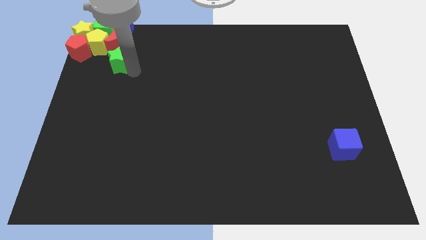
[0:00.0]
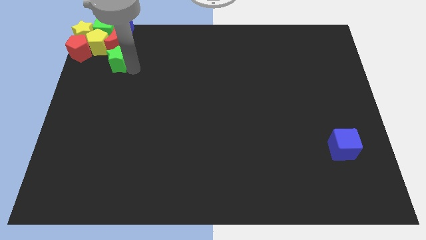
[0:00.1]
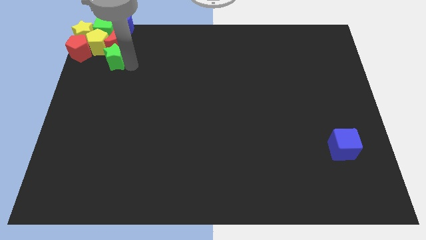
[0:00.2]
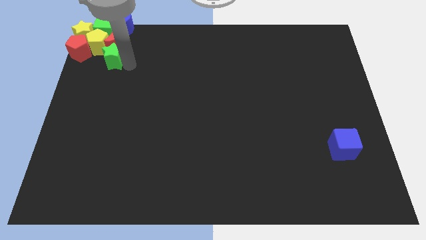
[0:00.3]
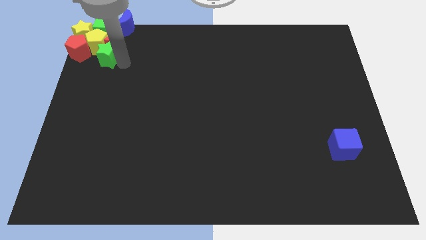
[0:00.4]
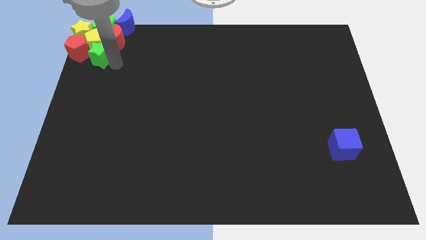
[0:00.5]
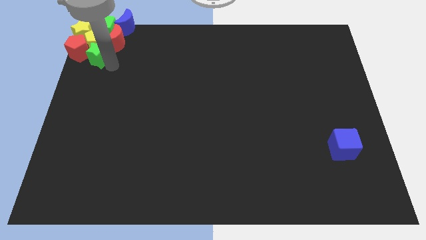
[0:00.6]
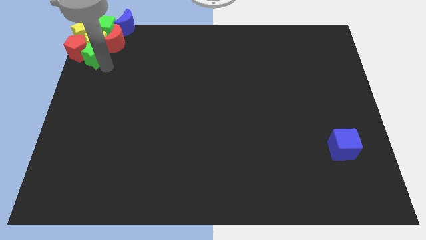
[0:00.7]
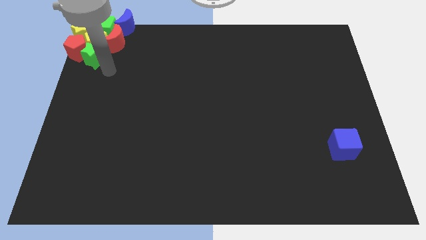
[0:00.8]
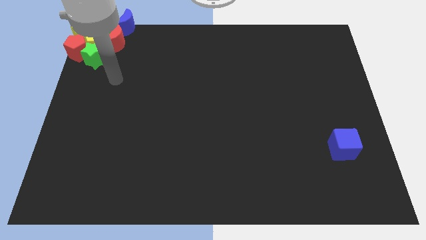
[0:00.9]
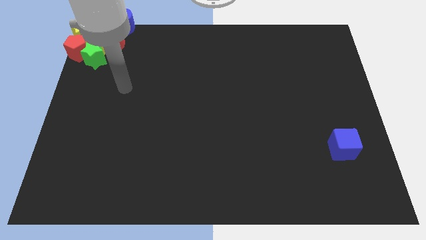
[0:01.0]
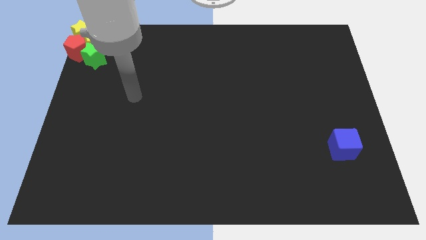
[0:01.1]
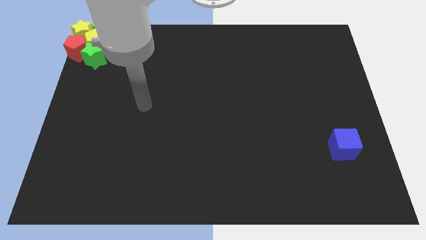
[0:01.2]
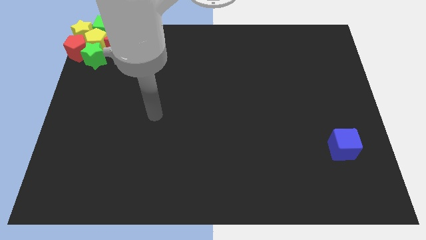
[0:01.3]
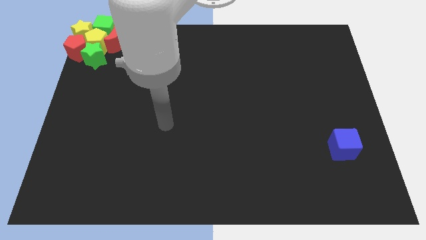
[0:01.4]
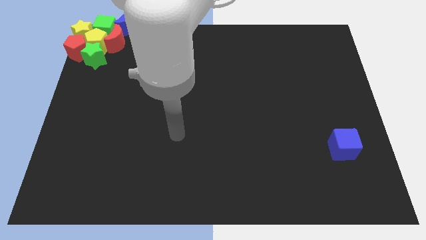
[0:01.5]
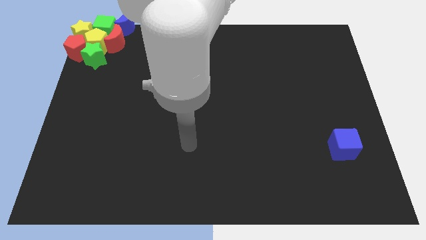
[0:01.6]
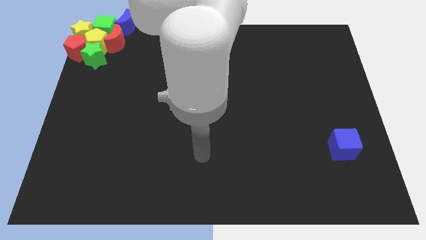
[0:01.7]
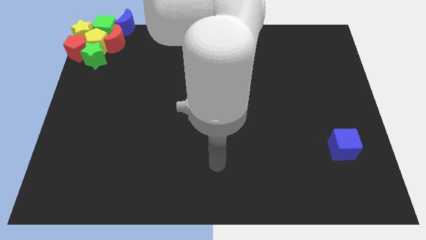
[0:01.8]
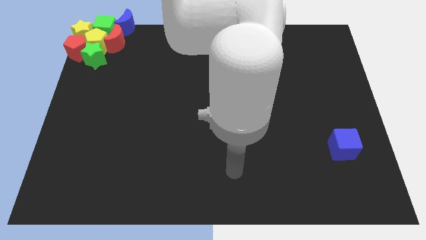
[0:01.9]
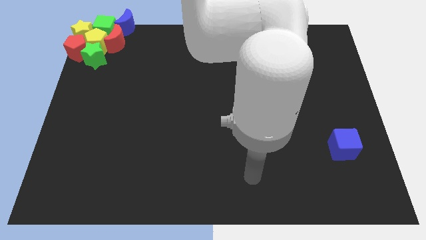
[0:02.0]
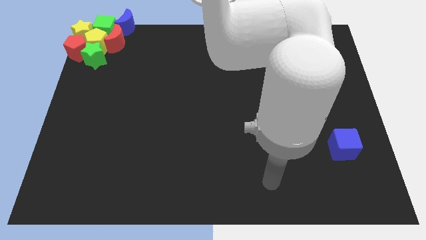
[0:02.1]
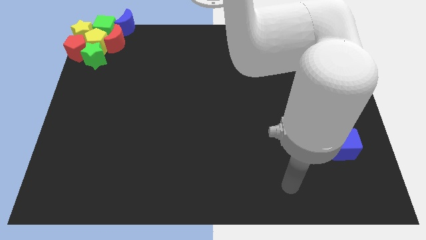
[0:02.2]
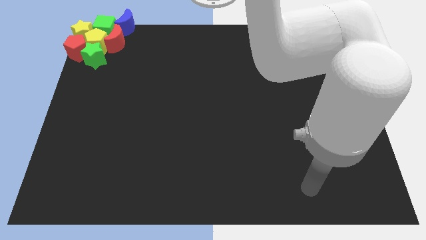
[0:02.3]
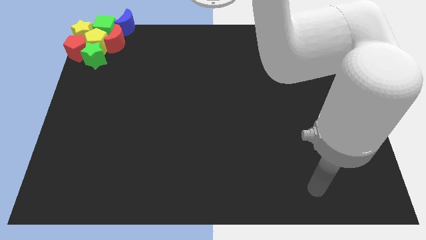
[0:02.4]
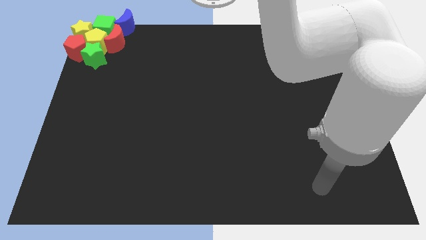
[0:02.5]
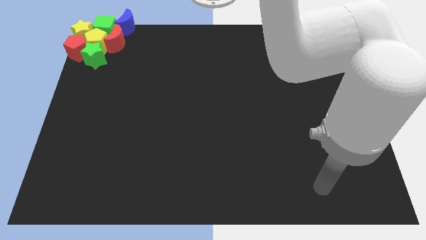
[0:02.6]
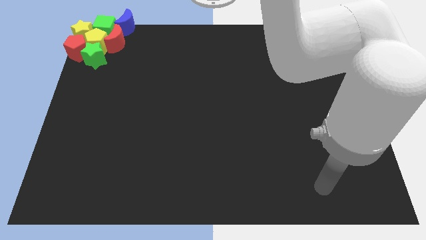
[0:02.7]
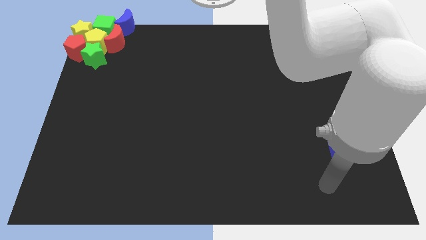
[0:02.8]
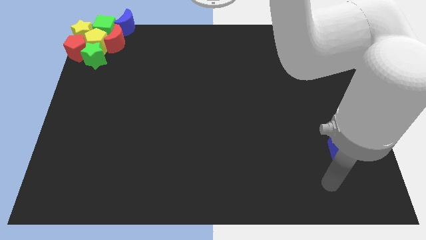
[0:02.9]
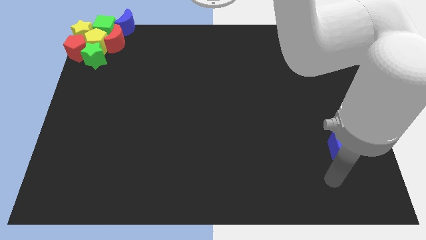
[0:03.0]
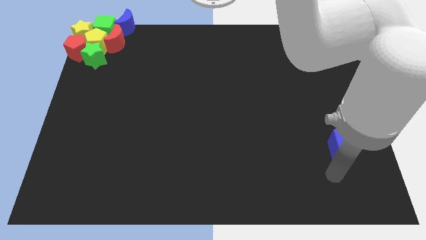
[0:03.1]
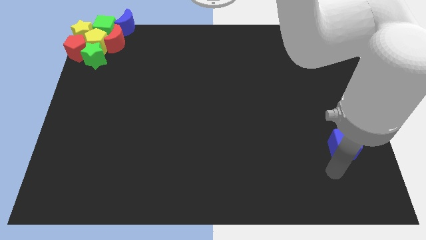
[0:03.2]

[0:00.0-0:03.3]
move the arm down to the blue cube

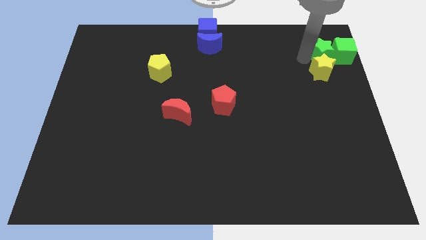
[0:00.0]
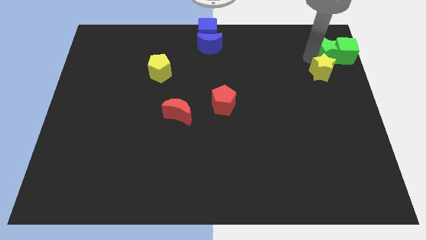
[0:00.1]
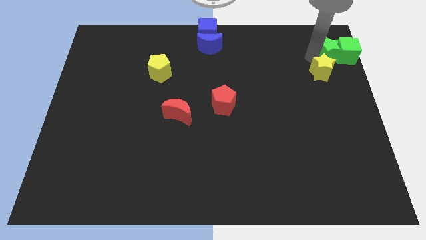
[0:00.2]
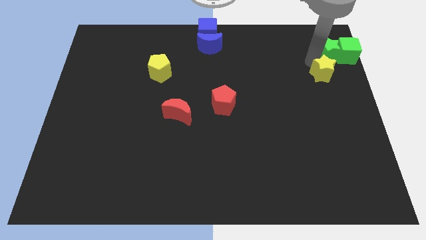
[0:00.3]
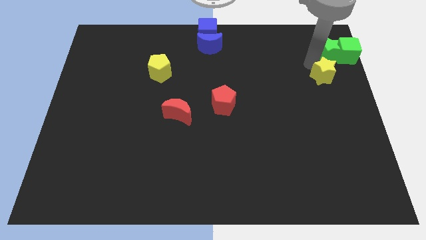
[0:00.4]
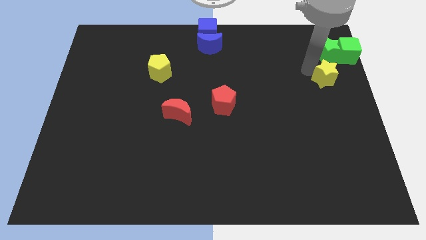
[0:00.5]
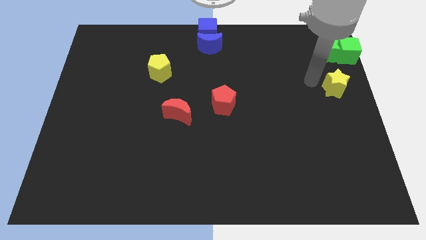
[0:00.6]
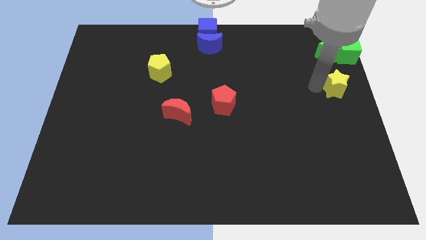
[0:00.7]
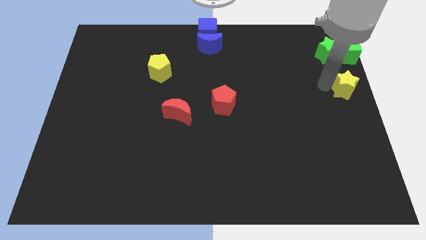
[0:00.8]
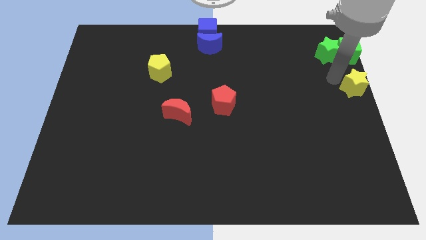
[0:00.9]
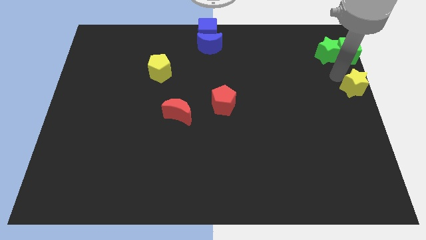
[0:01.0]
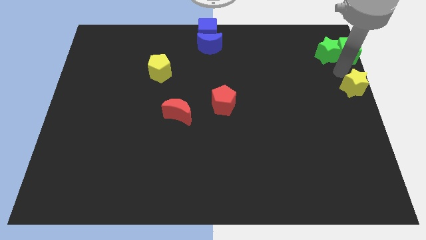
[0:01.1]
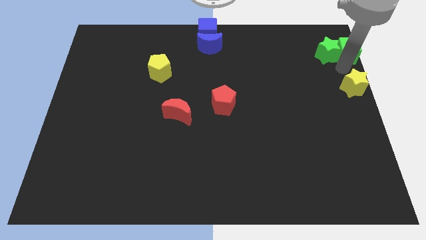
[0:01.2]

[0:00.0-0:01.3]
put the yellow star vertically below the green cube

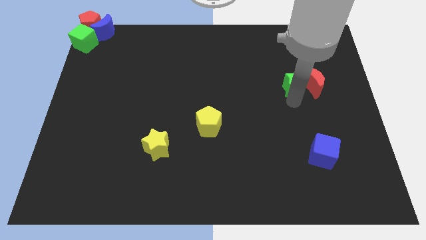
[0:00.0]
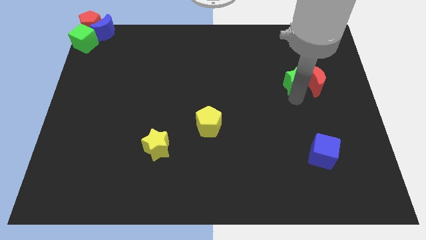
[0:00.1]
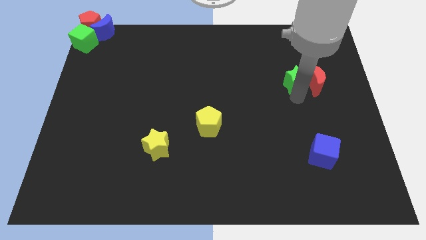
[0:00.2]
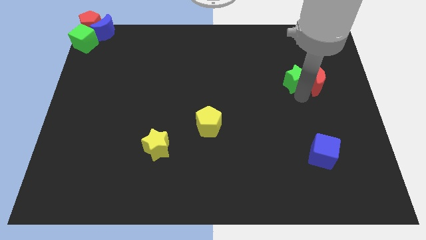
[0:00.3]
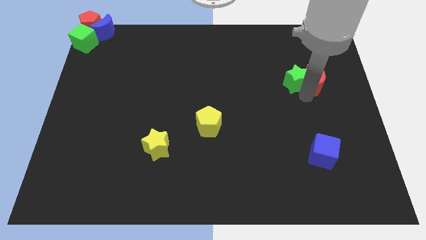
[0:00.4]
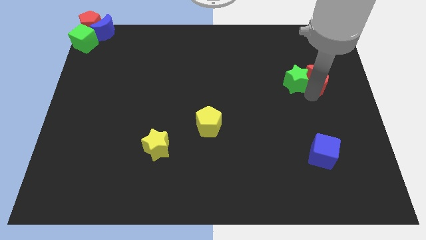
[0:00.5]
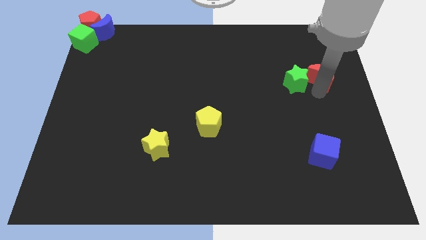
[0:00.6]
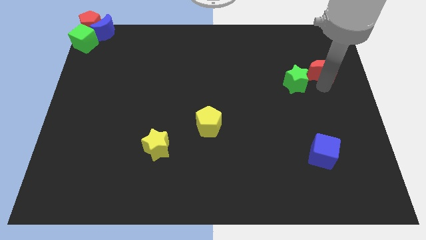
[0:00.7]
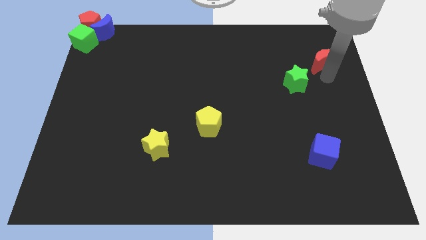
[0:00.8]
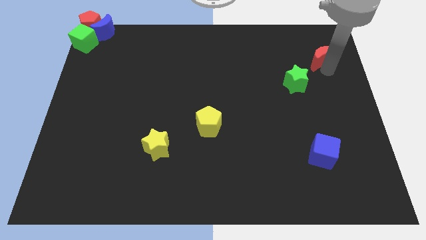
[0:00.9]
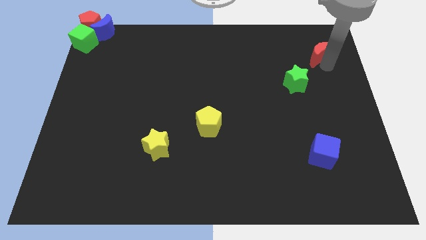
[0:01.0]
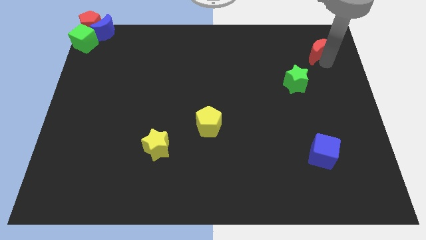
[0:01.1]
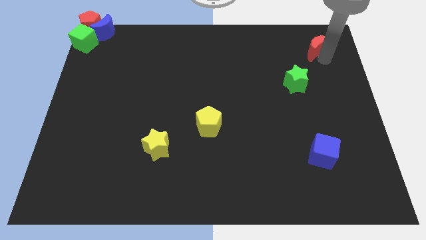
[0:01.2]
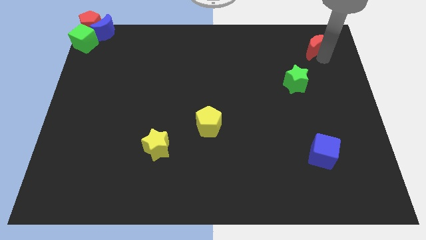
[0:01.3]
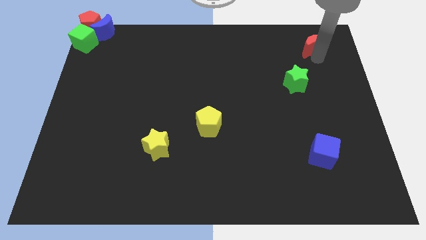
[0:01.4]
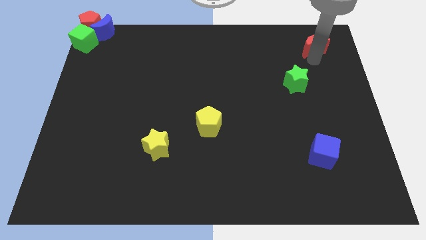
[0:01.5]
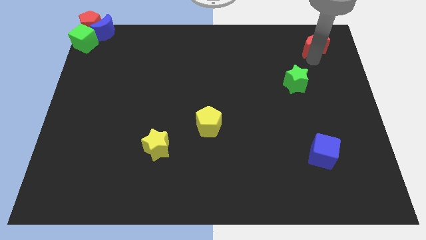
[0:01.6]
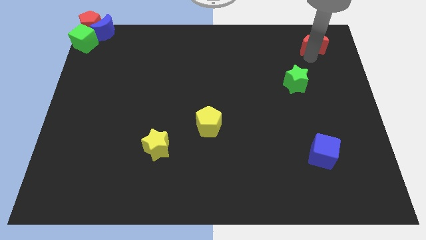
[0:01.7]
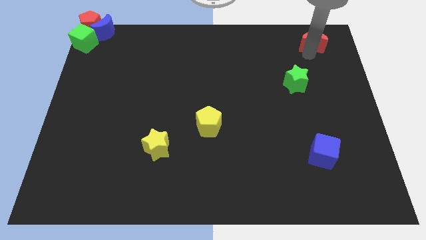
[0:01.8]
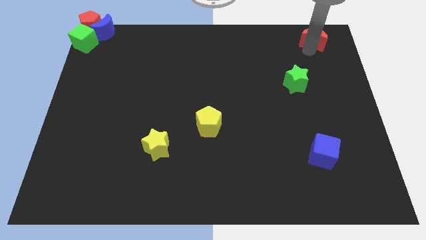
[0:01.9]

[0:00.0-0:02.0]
move the red moon away from the green star to the top side of the board diagonally

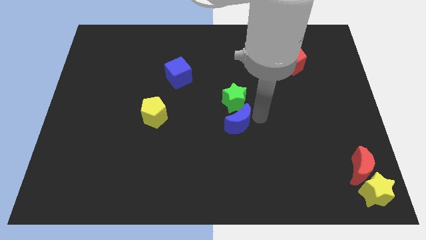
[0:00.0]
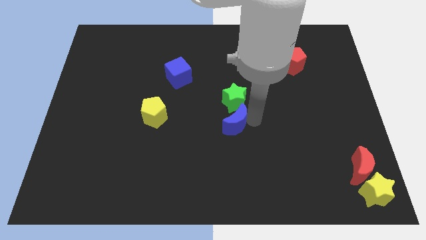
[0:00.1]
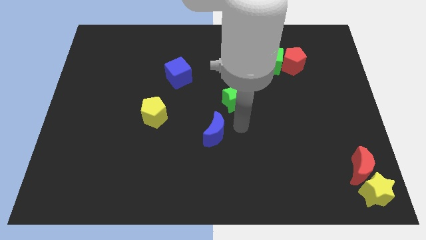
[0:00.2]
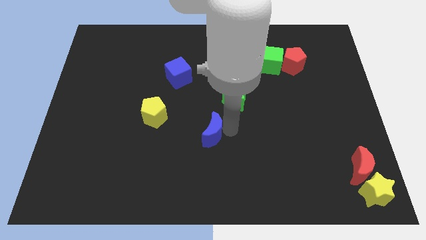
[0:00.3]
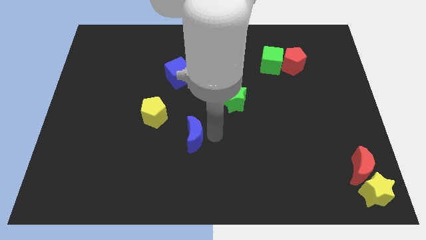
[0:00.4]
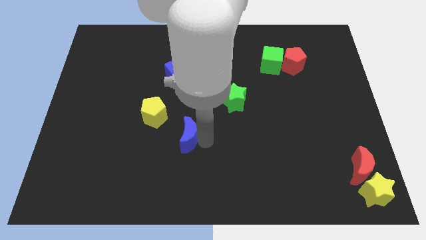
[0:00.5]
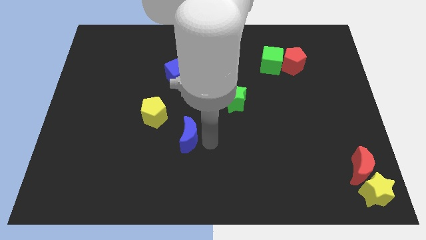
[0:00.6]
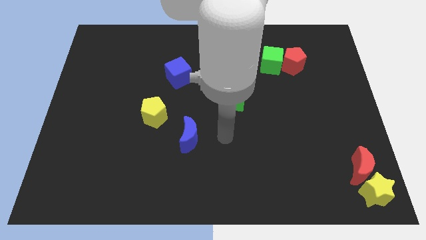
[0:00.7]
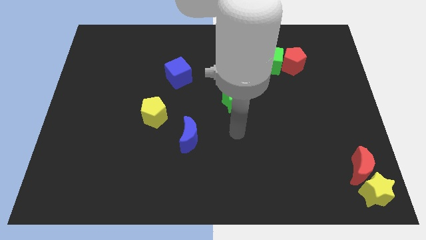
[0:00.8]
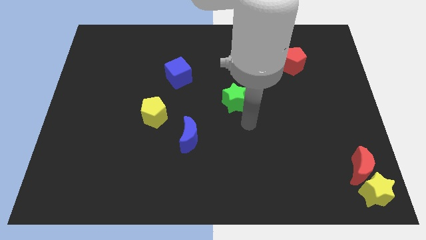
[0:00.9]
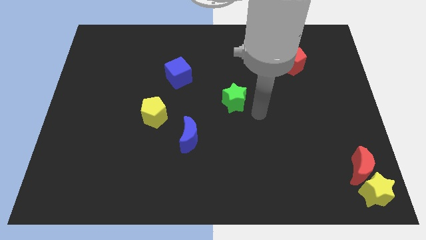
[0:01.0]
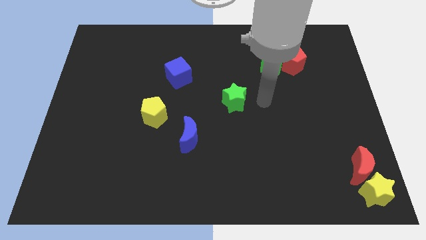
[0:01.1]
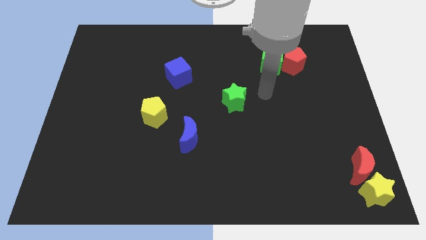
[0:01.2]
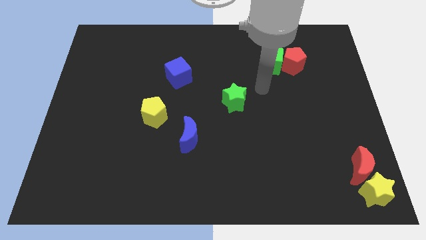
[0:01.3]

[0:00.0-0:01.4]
move the blue moon to the right bottom of the yellow pentagon

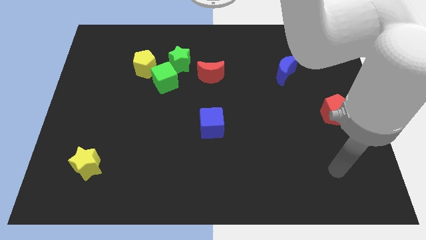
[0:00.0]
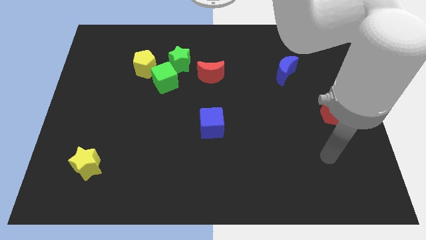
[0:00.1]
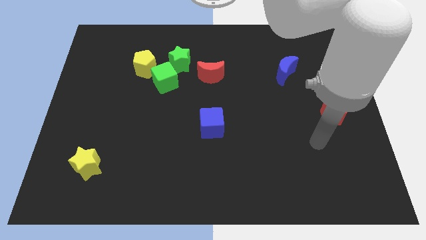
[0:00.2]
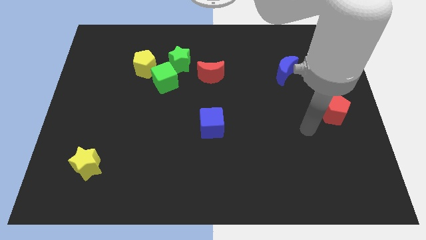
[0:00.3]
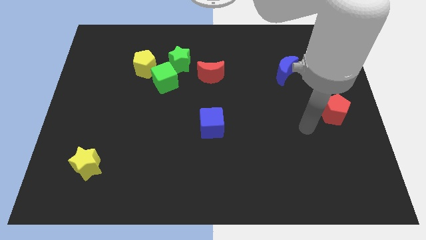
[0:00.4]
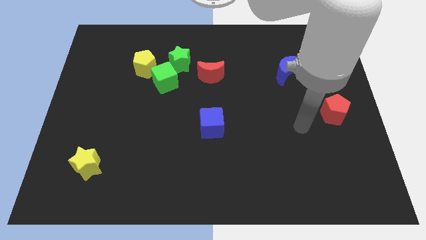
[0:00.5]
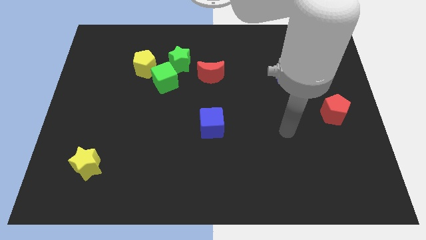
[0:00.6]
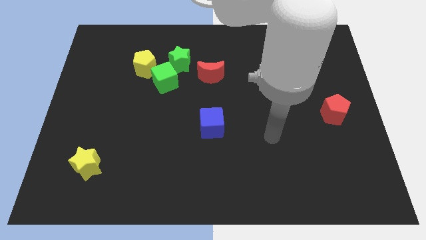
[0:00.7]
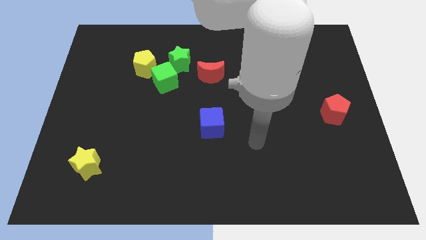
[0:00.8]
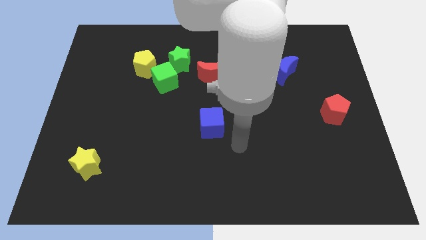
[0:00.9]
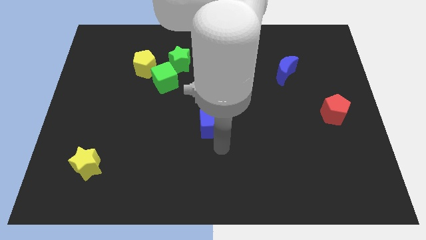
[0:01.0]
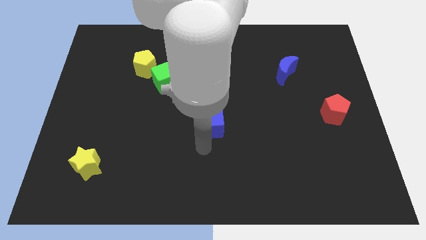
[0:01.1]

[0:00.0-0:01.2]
point the arm below the blue cube
